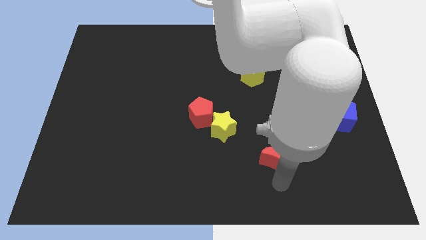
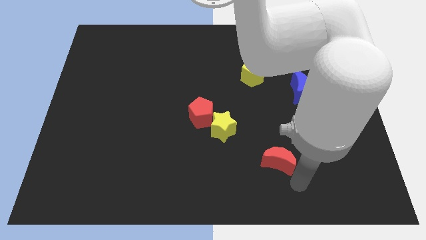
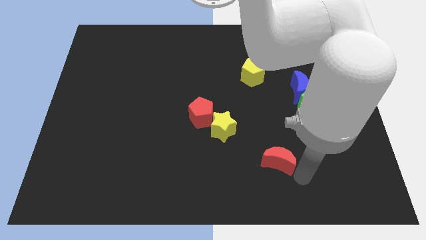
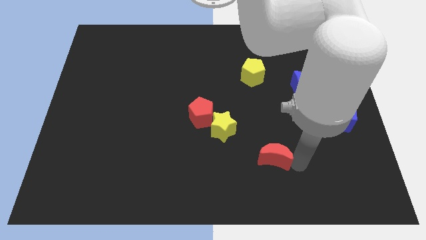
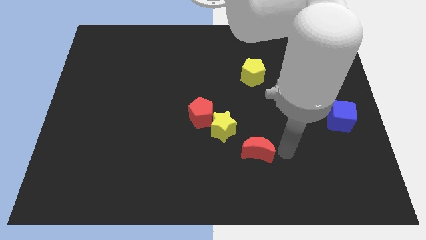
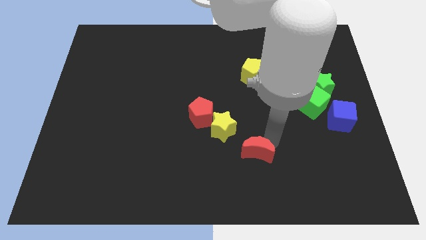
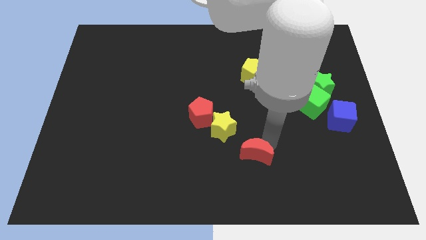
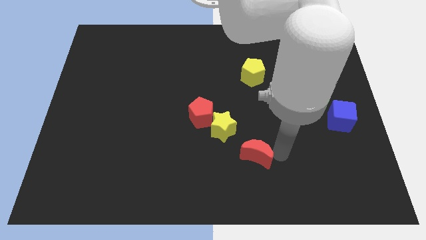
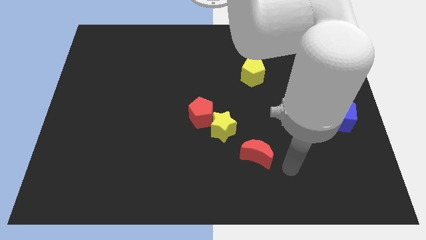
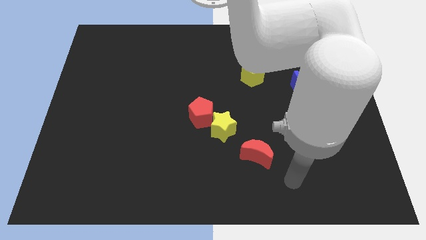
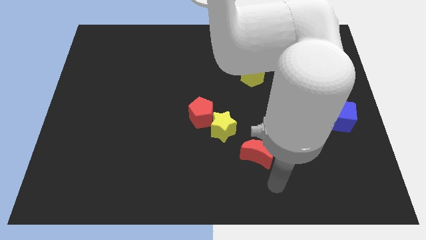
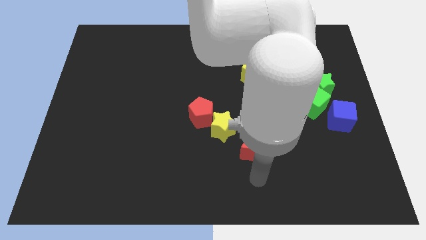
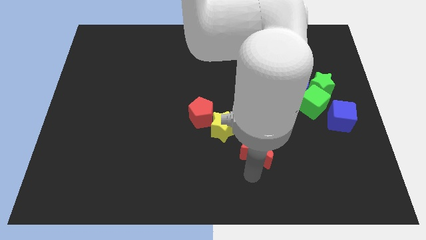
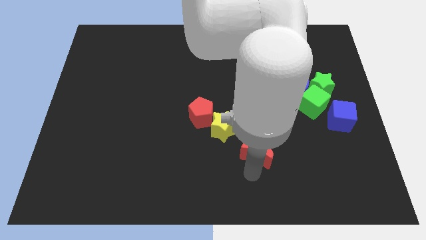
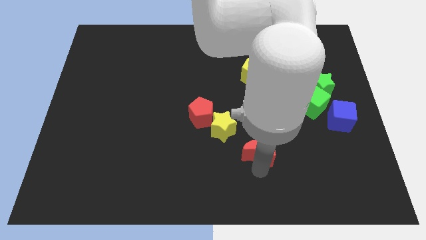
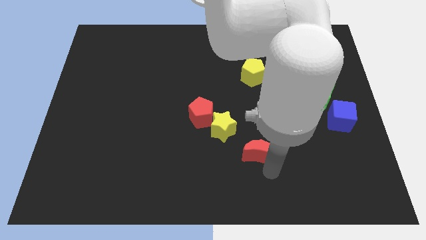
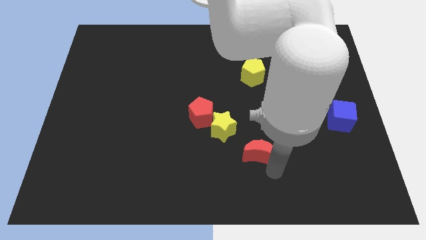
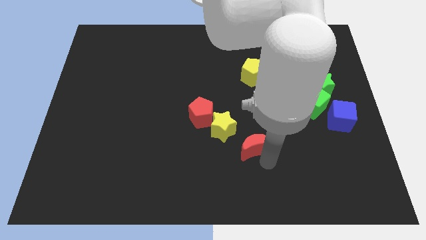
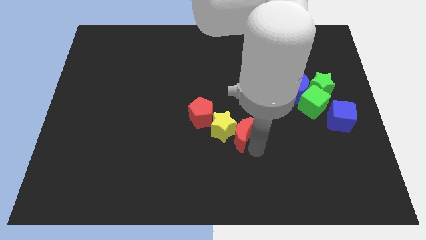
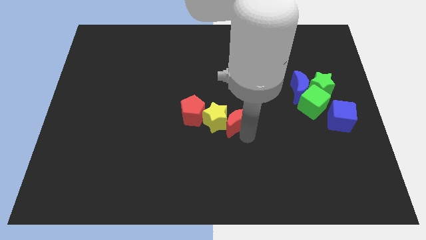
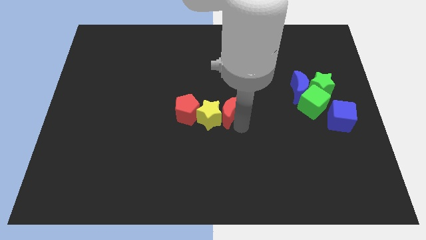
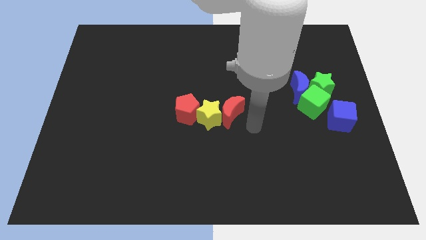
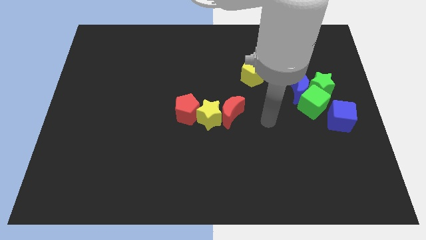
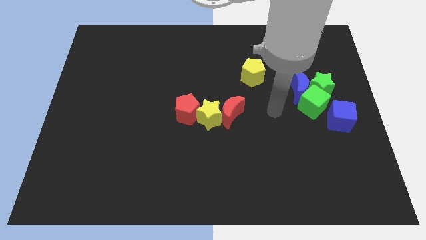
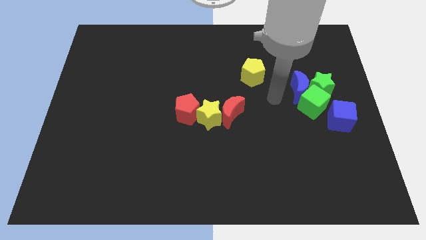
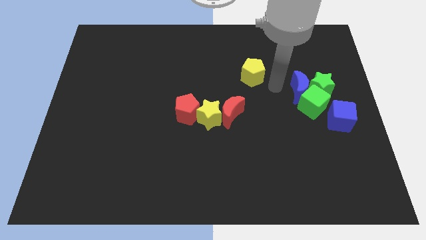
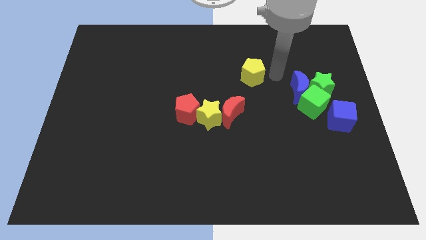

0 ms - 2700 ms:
push the red crescent into the yellow star

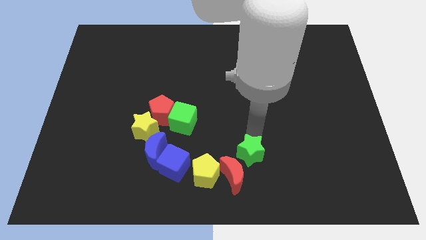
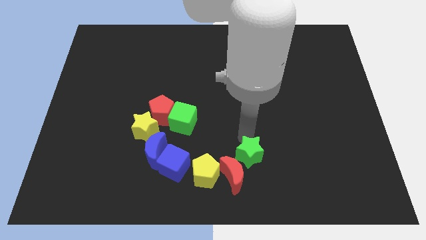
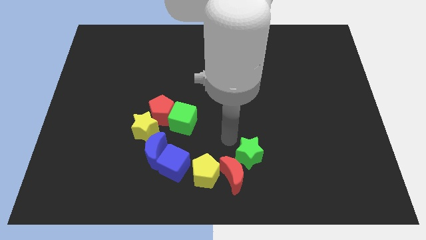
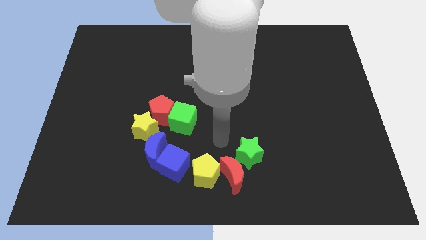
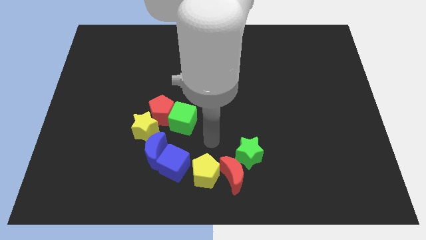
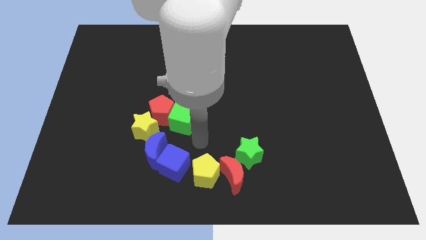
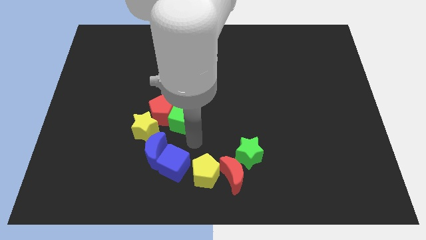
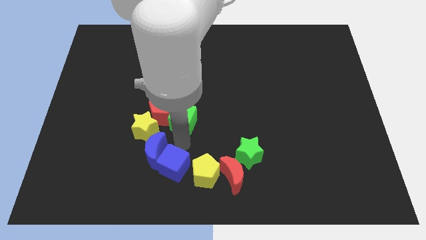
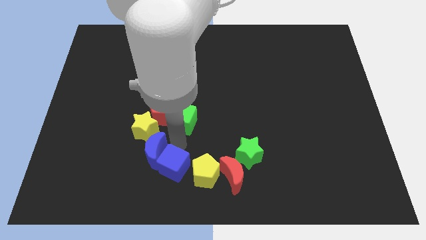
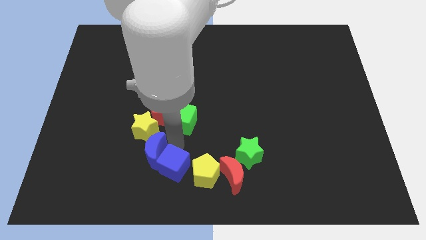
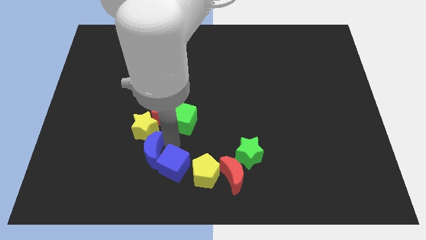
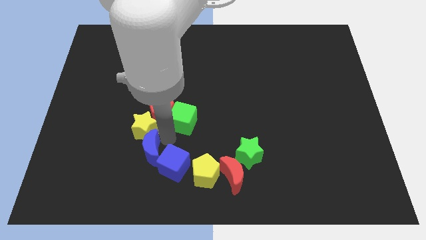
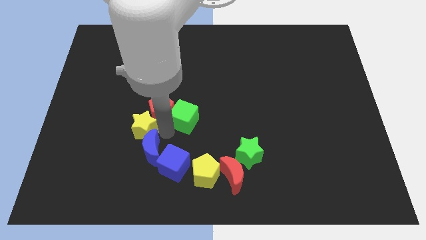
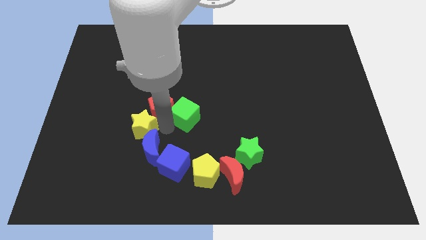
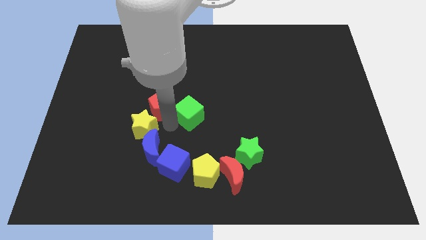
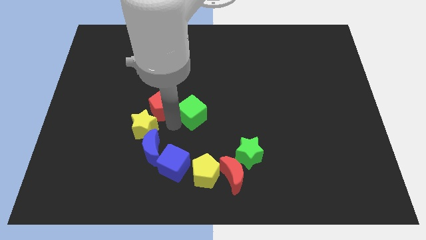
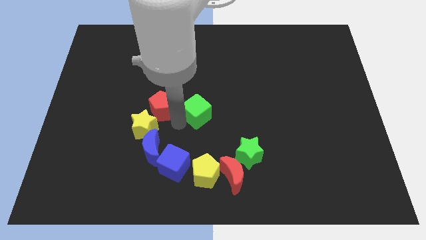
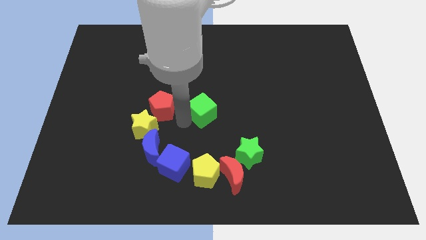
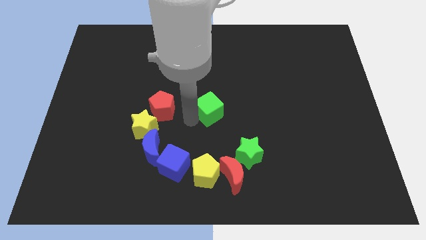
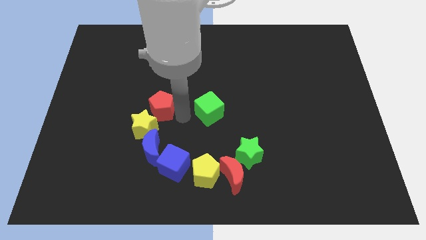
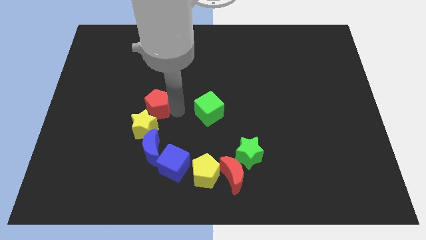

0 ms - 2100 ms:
place the green cube vertically above the yellow pentagon

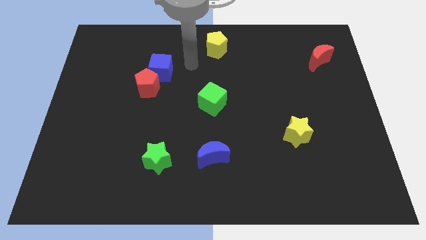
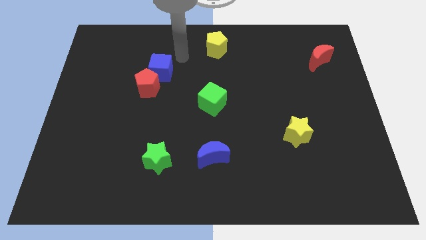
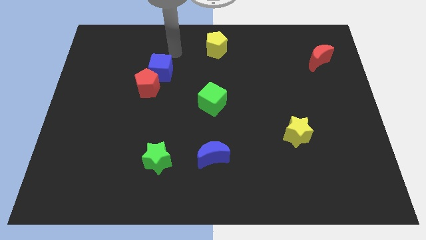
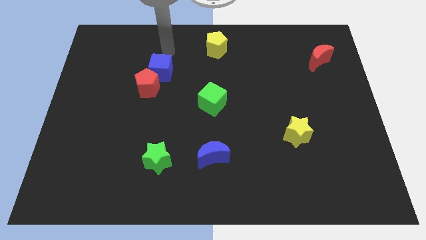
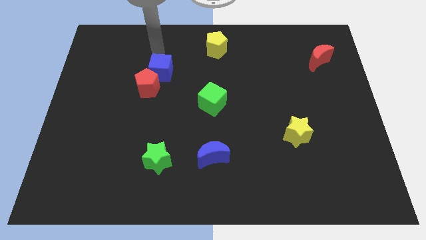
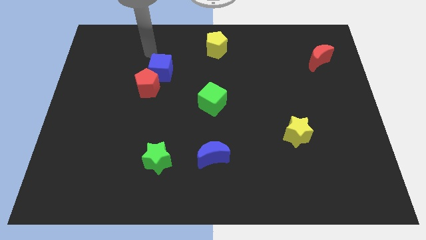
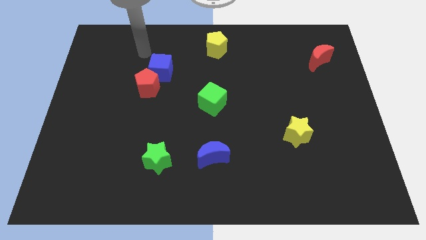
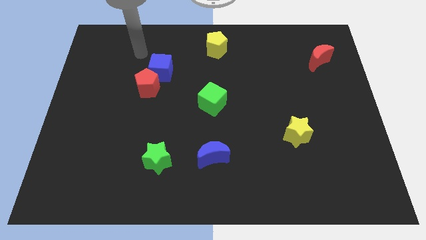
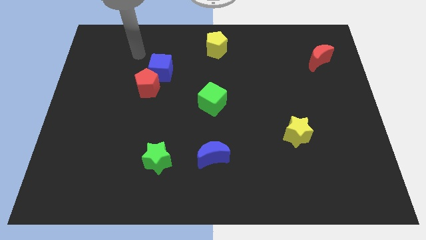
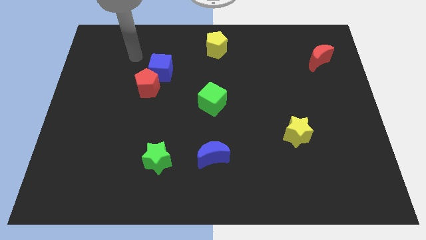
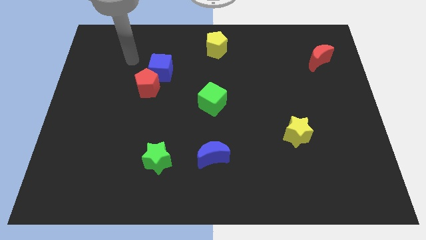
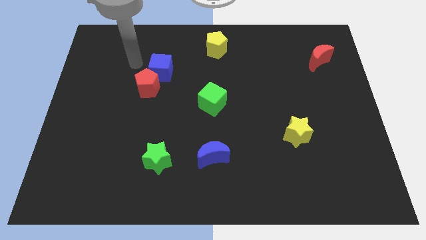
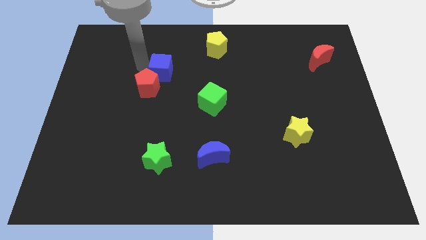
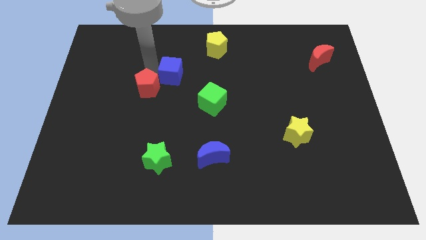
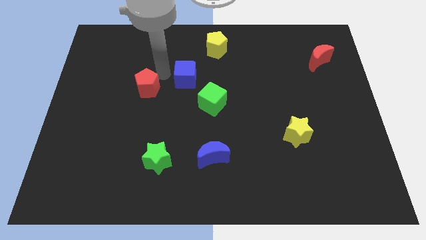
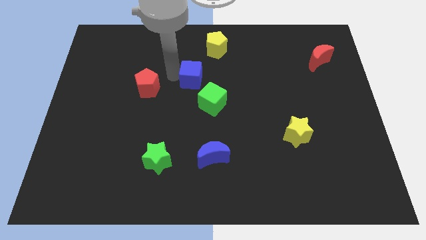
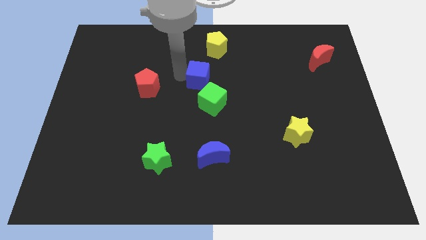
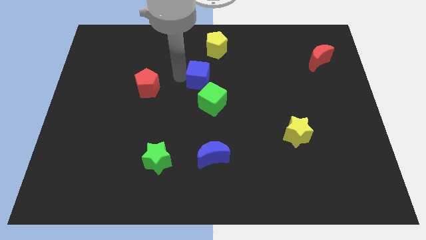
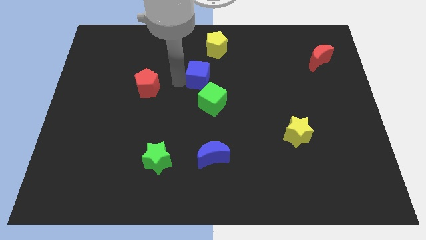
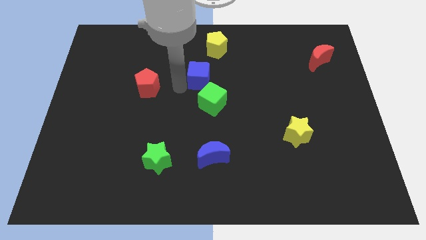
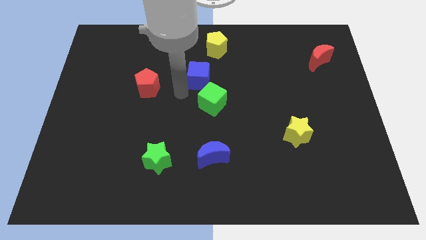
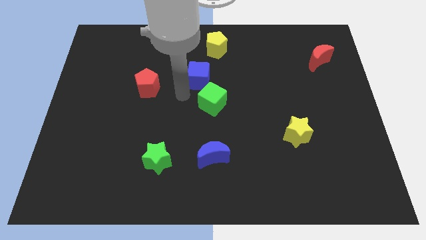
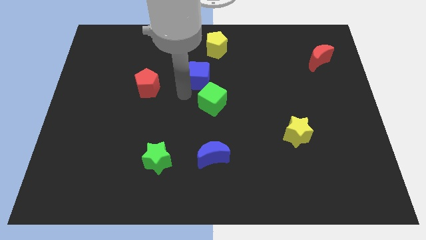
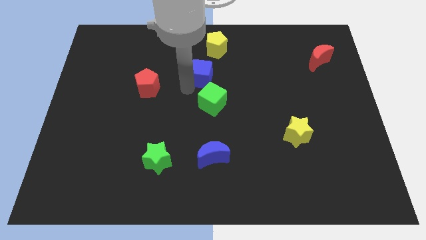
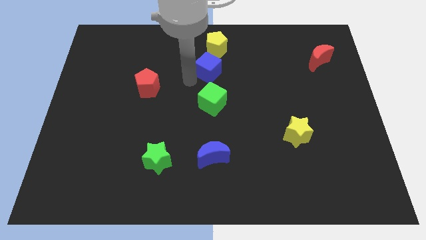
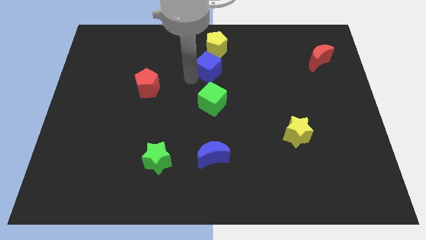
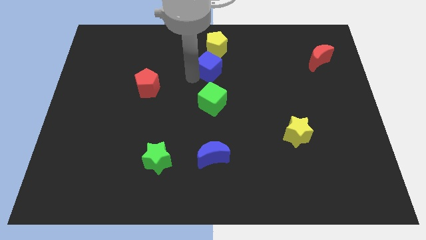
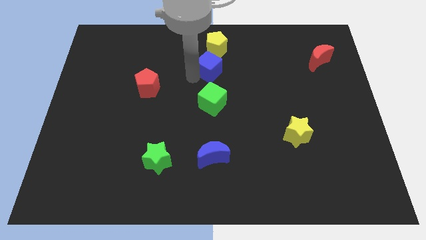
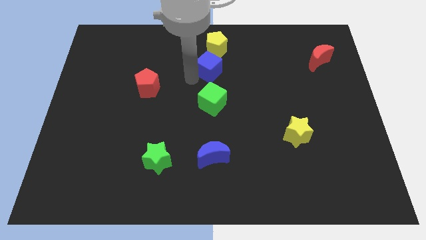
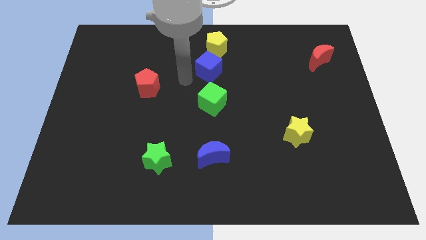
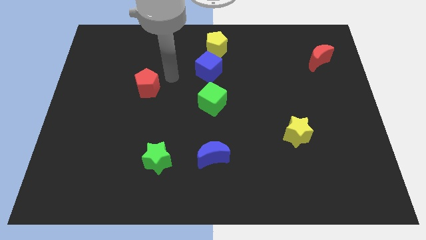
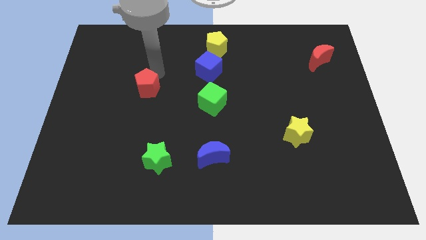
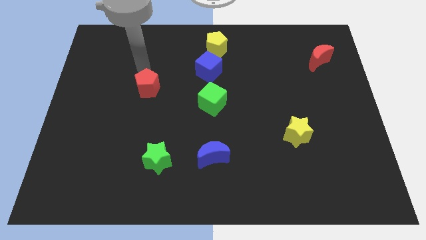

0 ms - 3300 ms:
push the blue cube to the top of the green cube

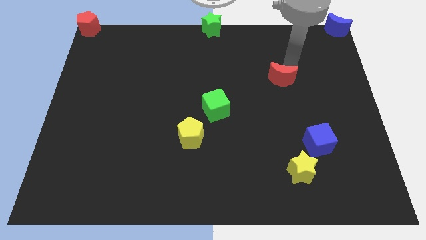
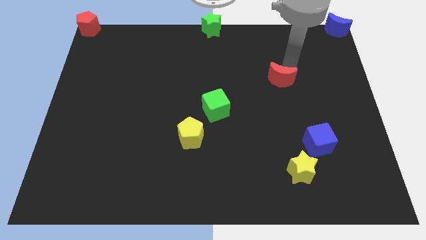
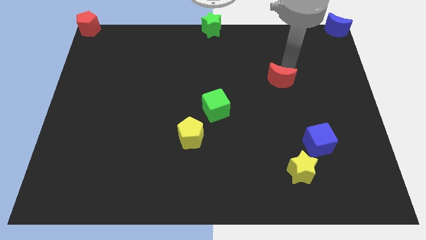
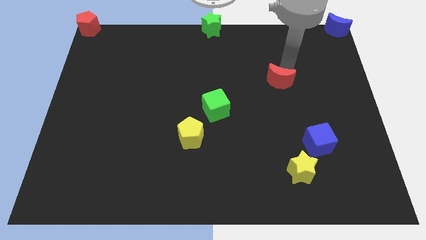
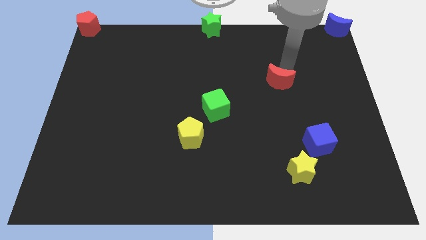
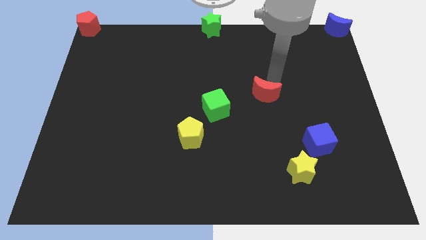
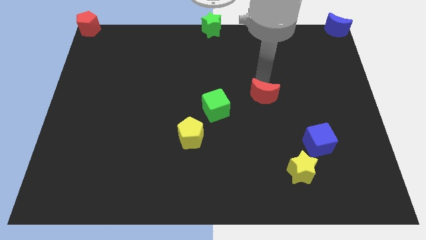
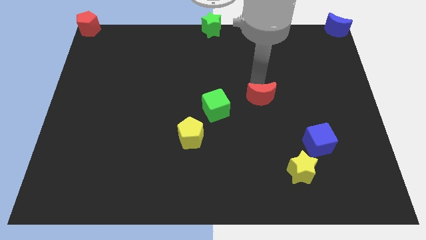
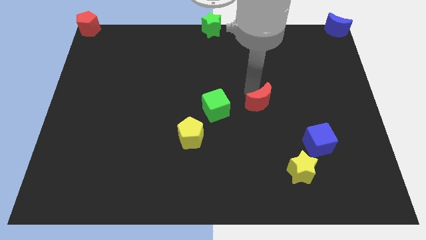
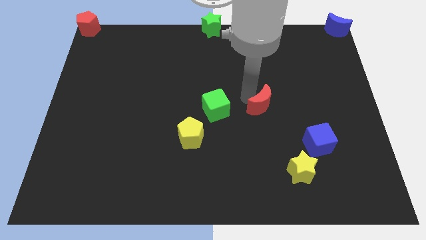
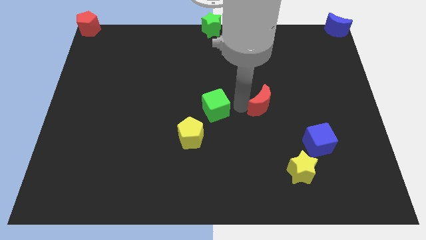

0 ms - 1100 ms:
adjust the red moon near to the green cube

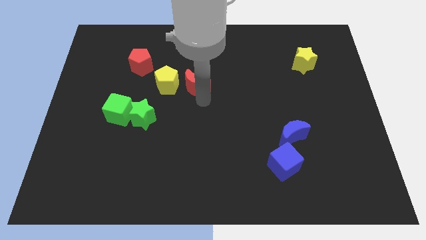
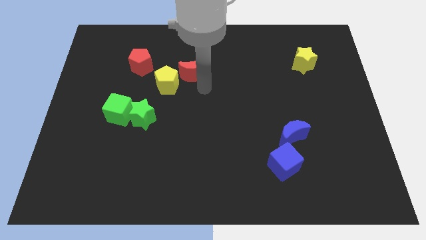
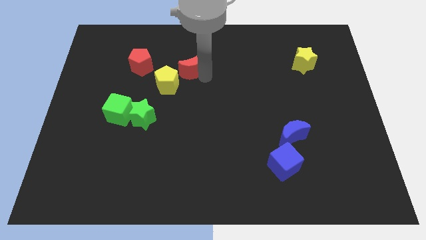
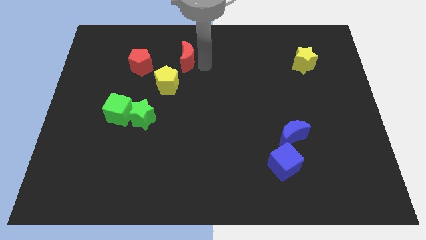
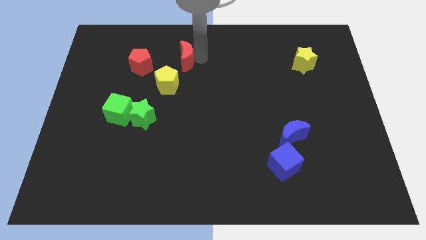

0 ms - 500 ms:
push the red crescent to the top of yellow pentagon
